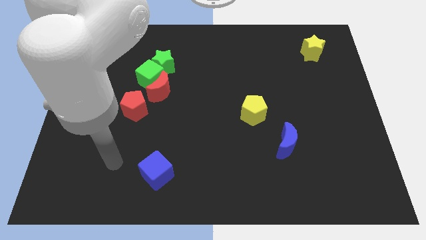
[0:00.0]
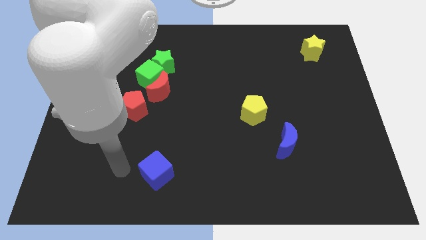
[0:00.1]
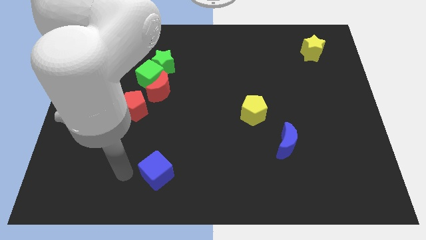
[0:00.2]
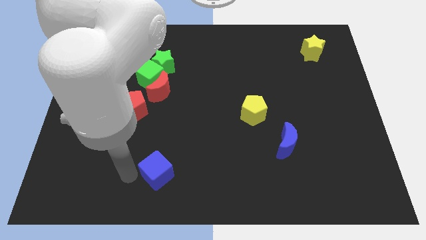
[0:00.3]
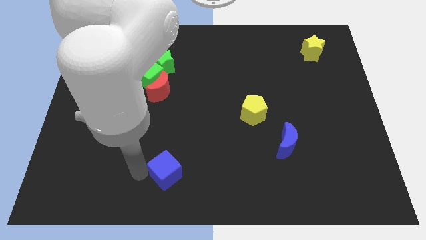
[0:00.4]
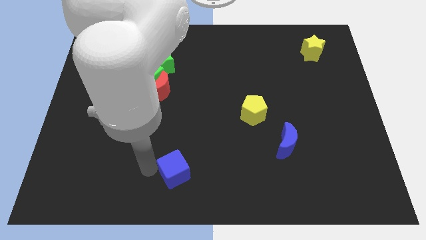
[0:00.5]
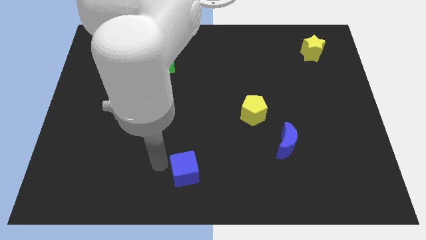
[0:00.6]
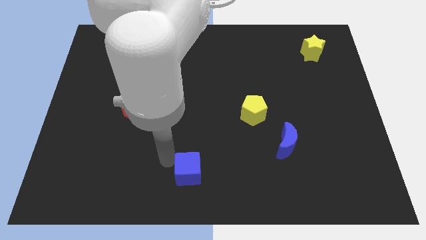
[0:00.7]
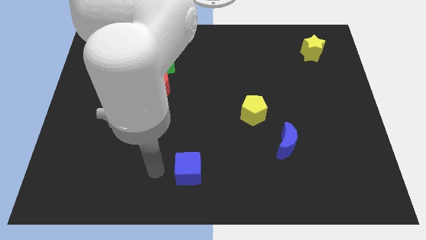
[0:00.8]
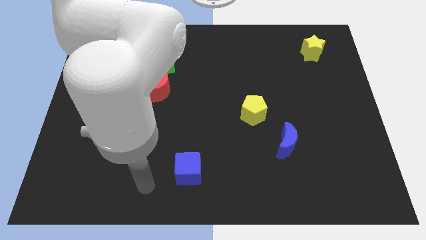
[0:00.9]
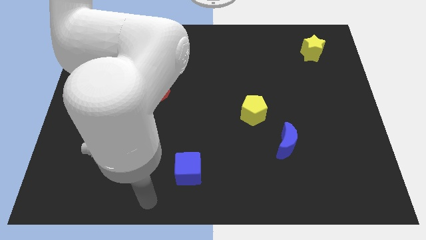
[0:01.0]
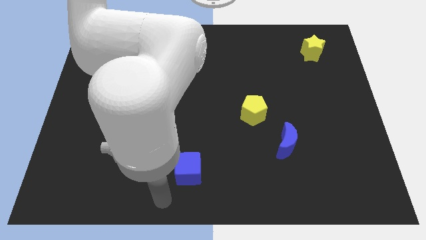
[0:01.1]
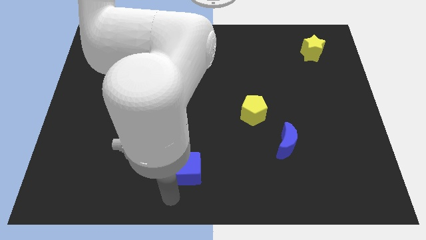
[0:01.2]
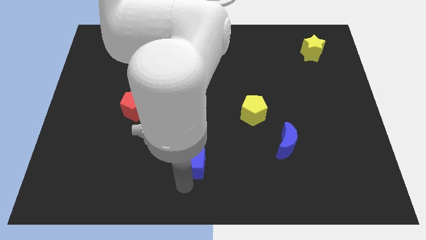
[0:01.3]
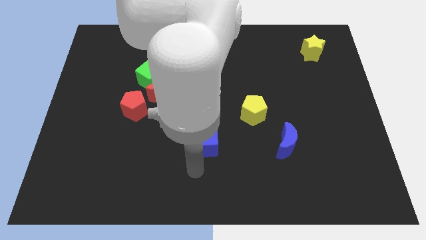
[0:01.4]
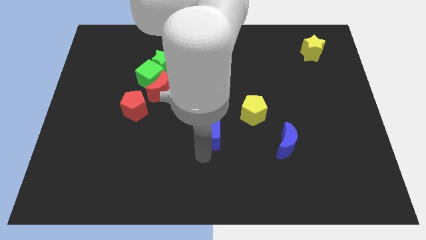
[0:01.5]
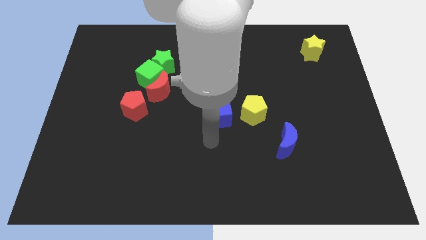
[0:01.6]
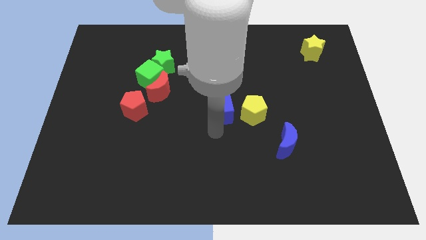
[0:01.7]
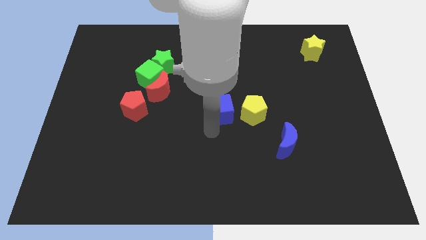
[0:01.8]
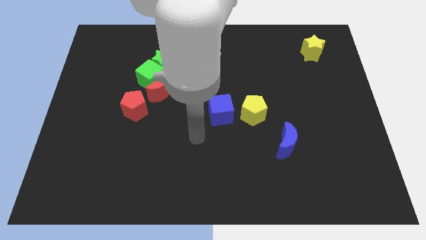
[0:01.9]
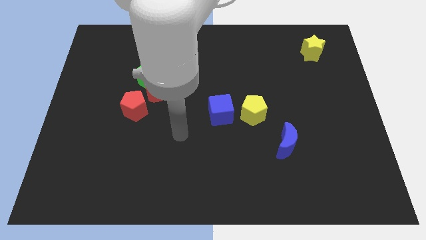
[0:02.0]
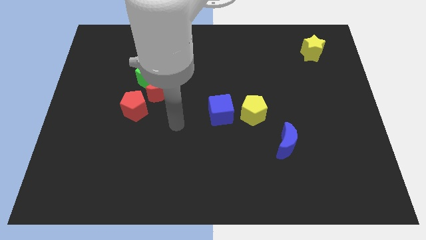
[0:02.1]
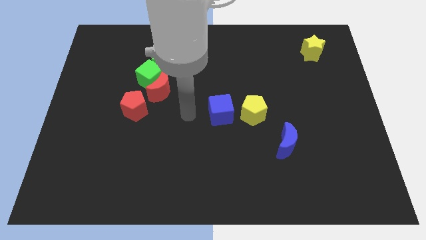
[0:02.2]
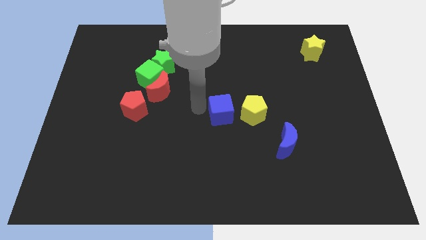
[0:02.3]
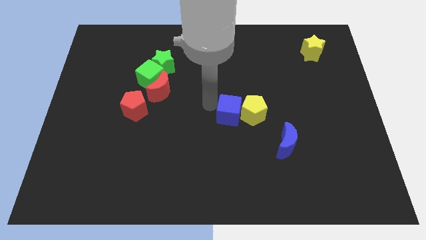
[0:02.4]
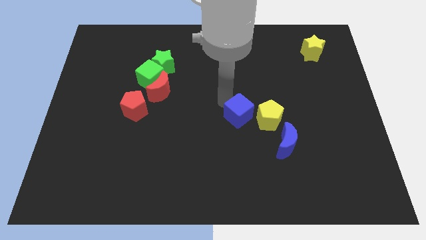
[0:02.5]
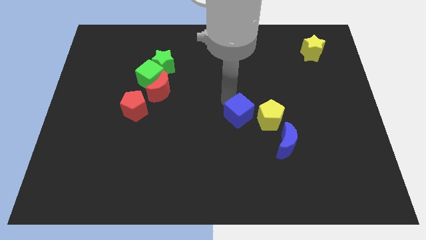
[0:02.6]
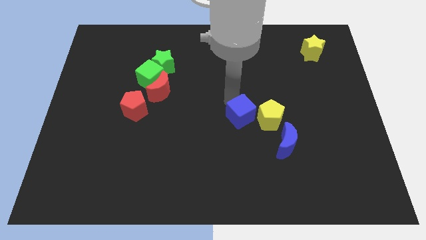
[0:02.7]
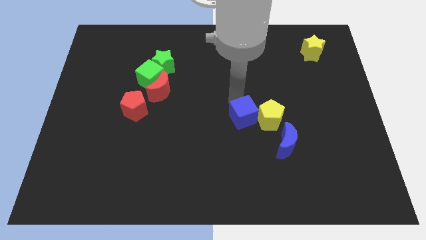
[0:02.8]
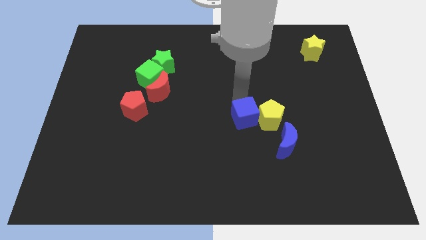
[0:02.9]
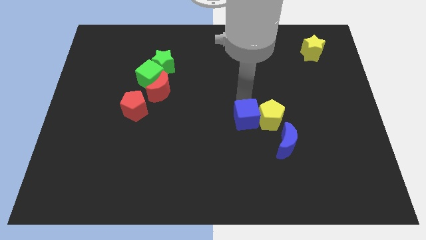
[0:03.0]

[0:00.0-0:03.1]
place blue cube into left of yellow pentagon

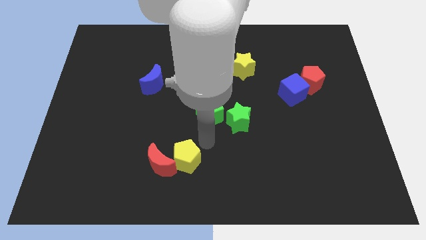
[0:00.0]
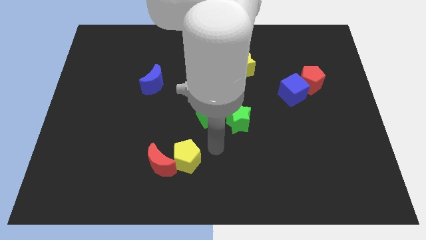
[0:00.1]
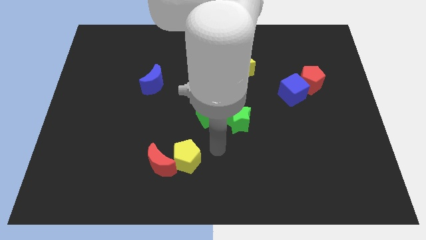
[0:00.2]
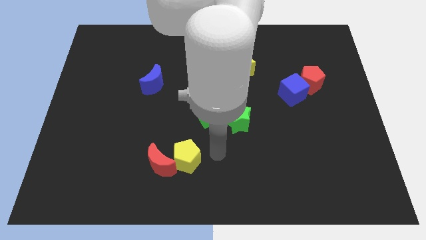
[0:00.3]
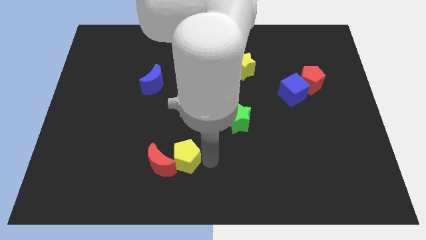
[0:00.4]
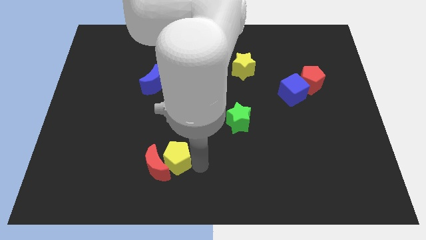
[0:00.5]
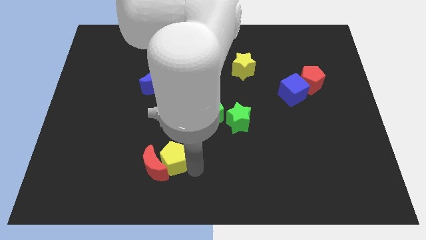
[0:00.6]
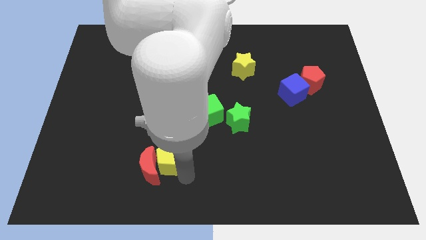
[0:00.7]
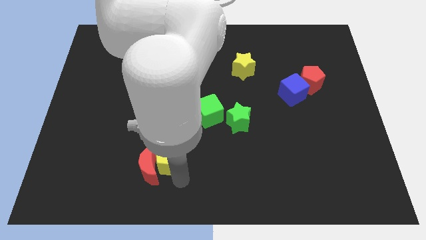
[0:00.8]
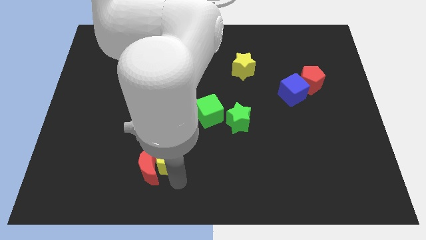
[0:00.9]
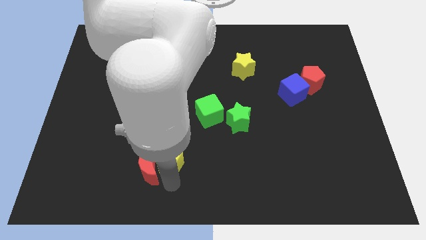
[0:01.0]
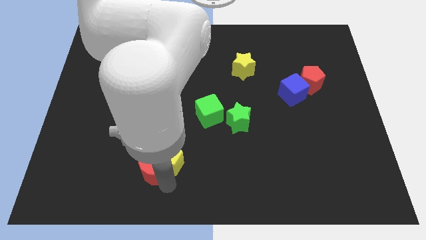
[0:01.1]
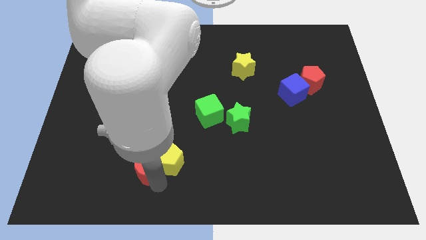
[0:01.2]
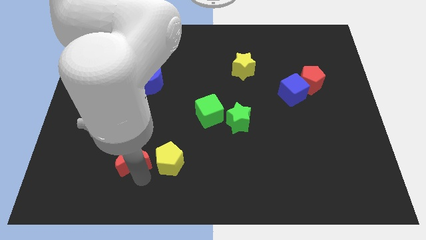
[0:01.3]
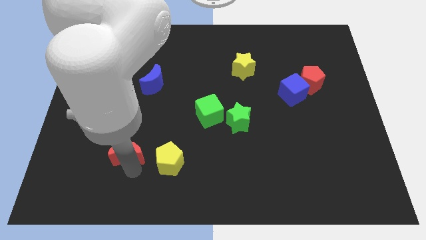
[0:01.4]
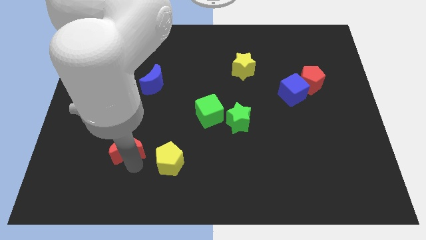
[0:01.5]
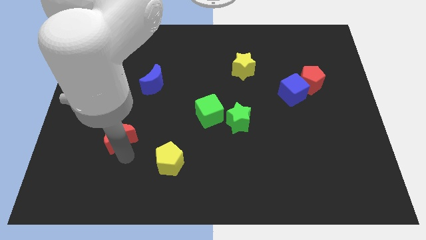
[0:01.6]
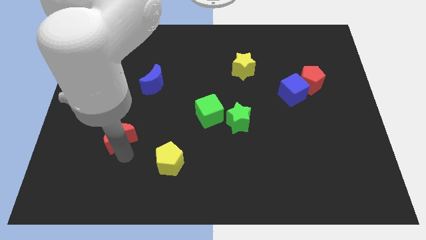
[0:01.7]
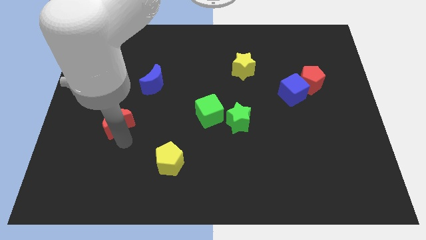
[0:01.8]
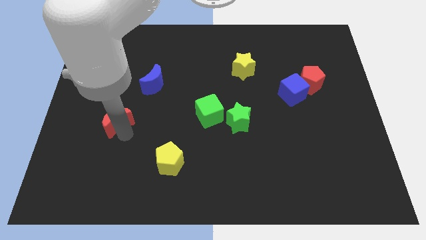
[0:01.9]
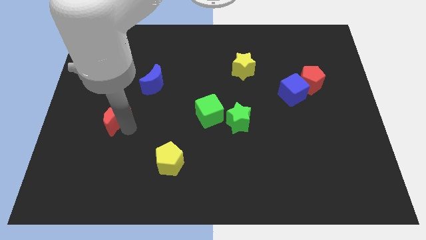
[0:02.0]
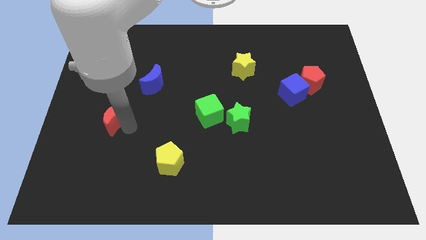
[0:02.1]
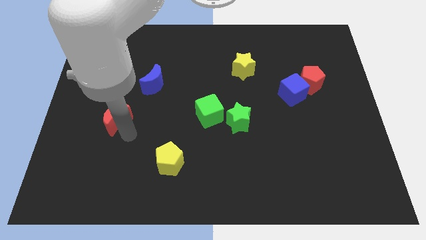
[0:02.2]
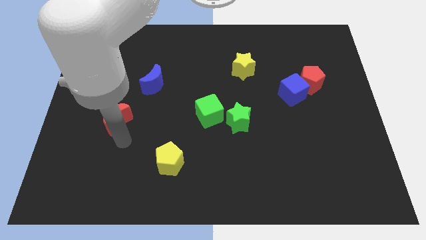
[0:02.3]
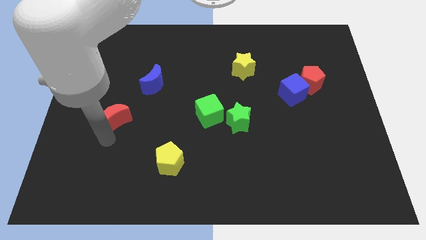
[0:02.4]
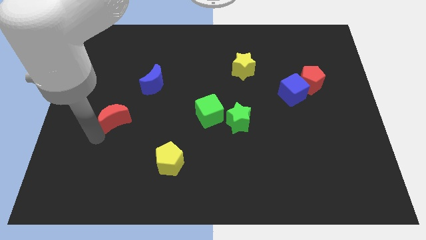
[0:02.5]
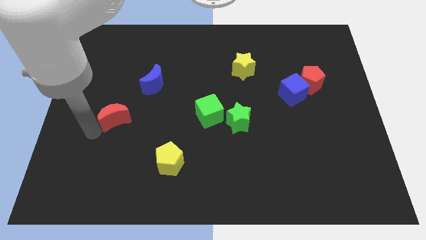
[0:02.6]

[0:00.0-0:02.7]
place the red moon left to the green cube

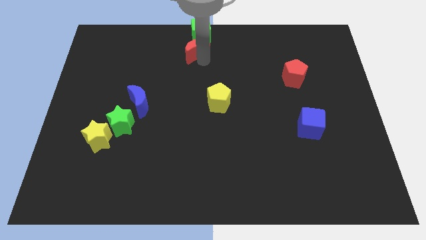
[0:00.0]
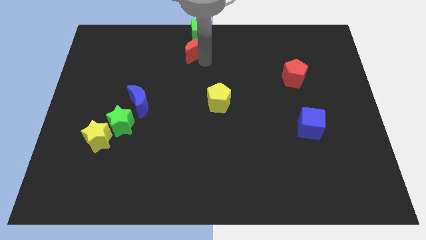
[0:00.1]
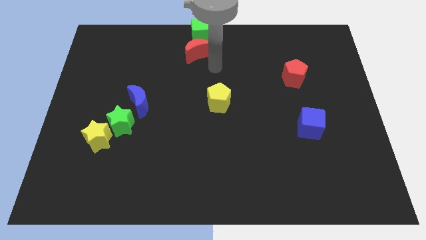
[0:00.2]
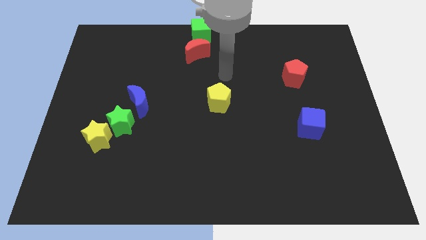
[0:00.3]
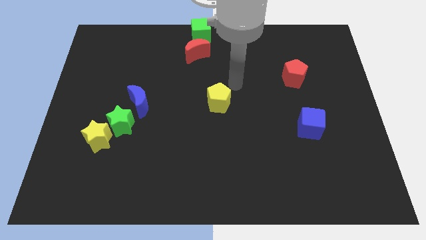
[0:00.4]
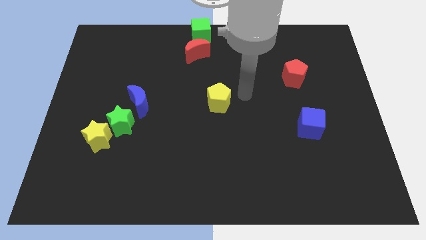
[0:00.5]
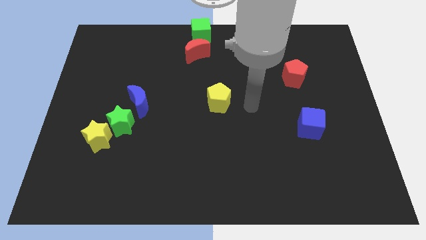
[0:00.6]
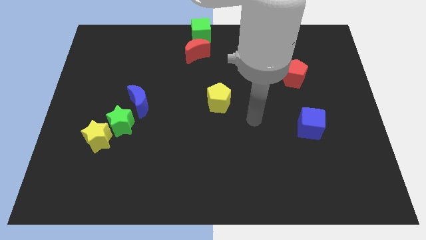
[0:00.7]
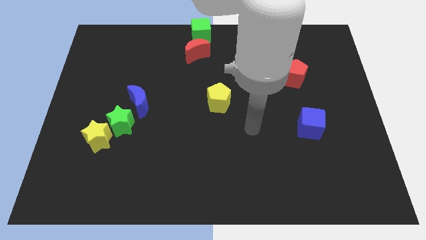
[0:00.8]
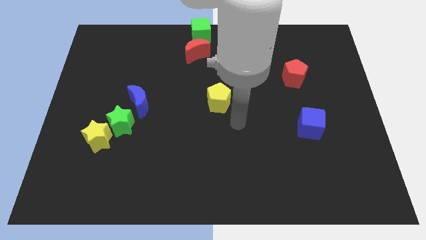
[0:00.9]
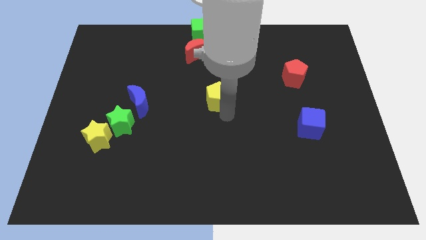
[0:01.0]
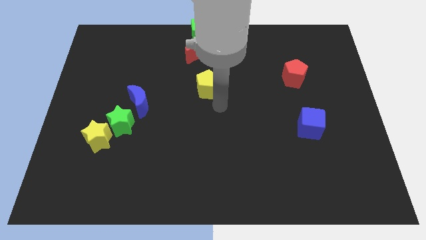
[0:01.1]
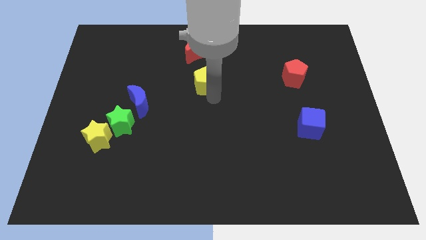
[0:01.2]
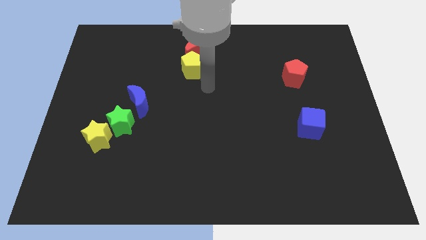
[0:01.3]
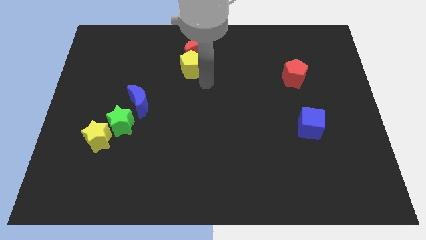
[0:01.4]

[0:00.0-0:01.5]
push the yellow pentagon to the bottom of the red crescent

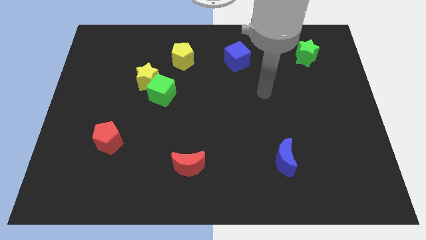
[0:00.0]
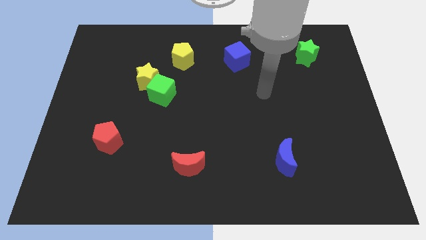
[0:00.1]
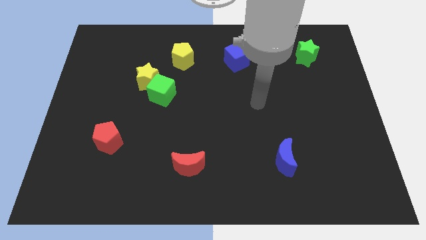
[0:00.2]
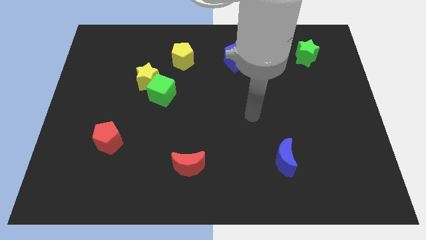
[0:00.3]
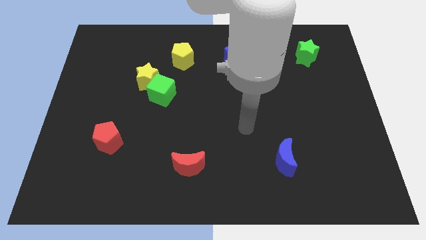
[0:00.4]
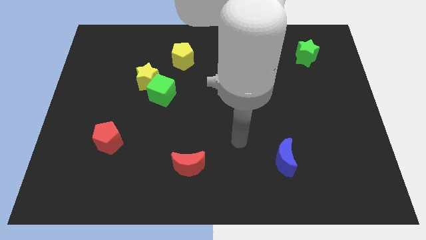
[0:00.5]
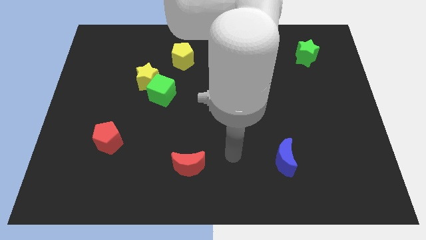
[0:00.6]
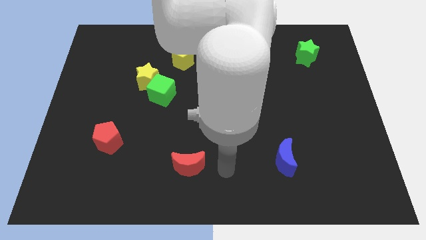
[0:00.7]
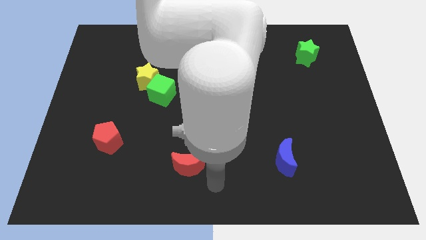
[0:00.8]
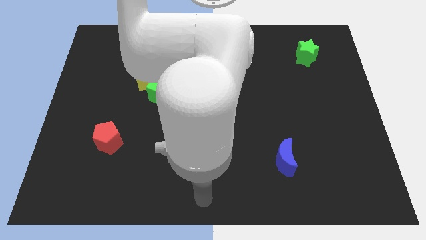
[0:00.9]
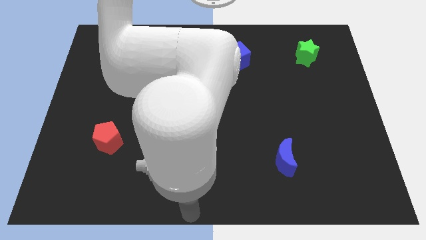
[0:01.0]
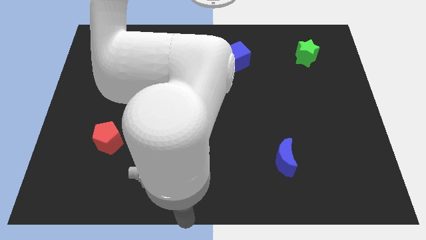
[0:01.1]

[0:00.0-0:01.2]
point your arm at the bottom center of the board

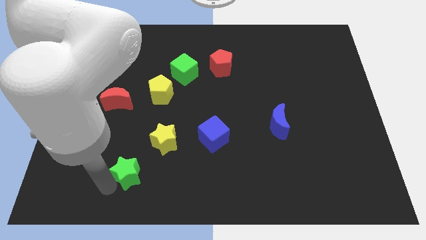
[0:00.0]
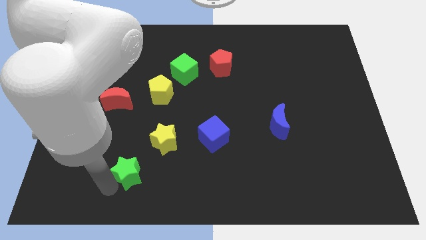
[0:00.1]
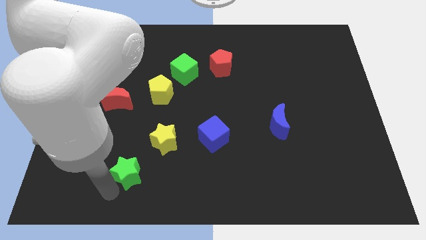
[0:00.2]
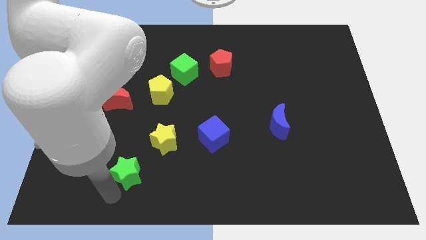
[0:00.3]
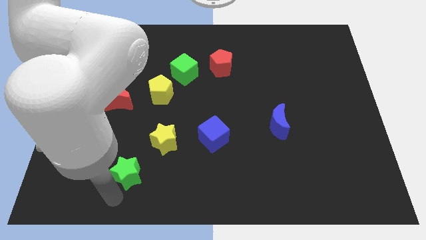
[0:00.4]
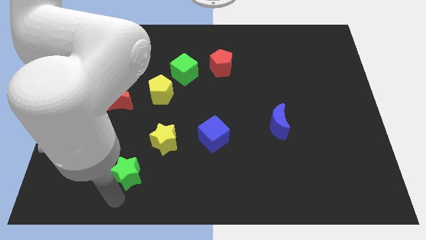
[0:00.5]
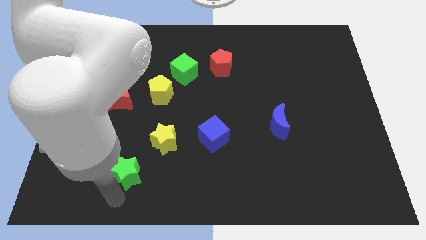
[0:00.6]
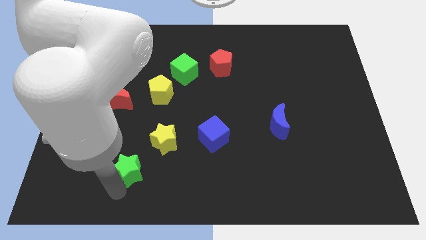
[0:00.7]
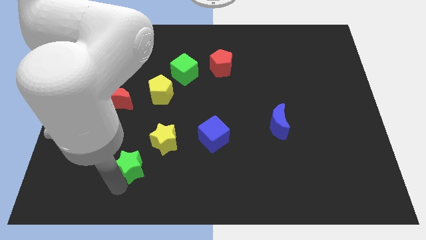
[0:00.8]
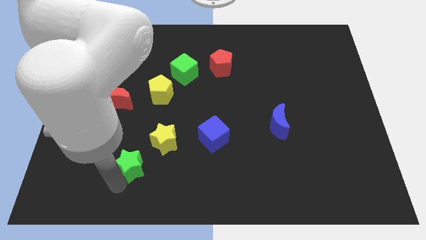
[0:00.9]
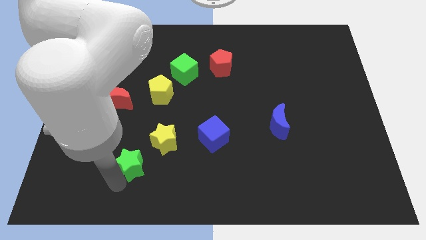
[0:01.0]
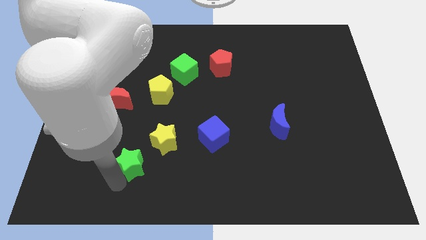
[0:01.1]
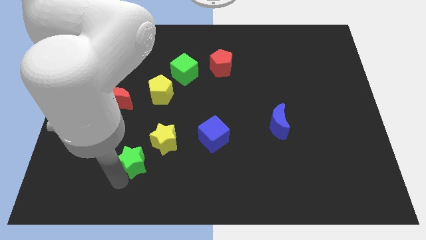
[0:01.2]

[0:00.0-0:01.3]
push green star towards yellow star
